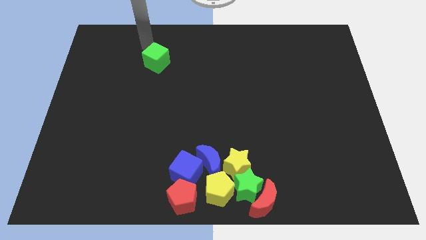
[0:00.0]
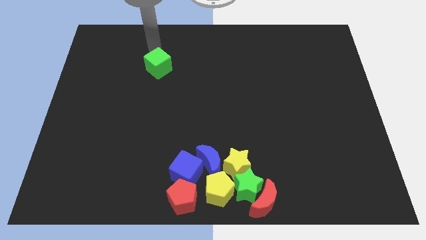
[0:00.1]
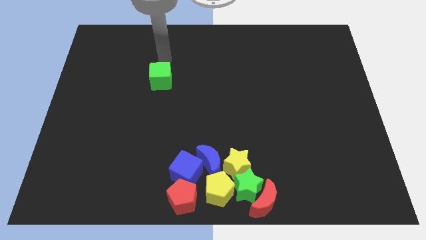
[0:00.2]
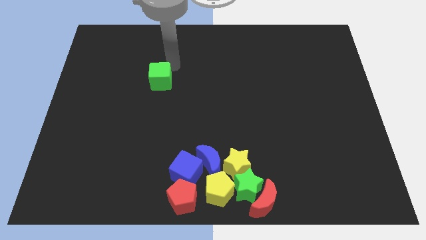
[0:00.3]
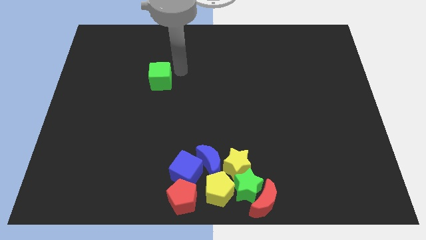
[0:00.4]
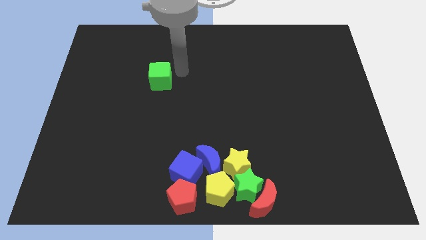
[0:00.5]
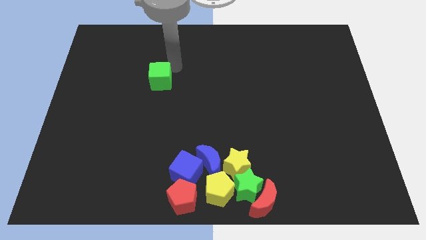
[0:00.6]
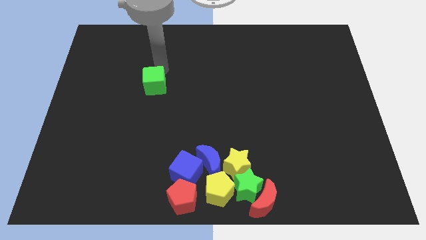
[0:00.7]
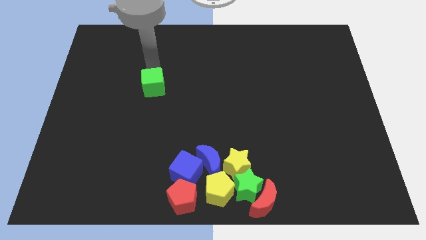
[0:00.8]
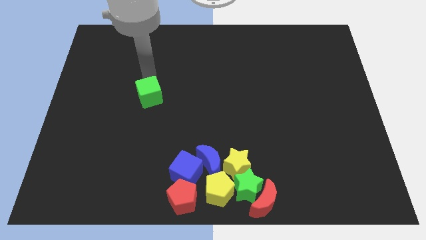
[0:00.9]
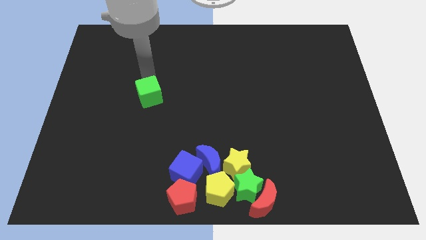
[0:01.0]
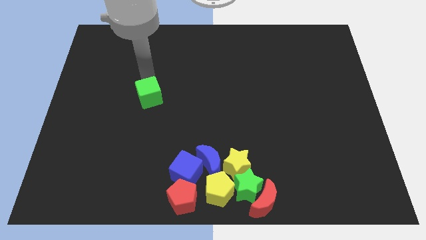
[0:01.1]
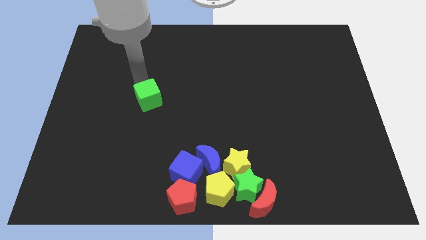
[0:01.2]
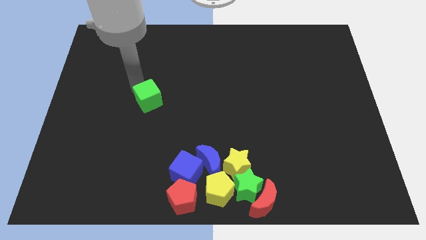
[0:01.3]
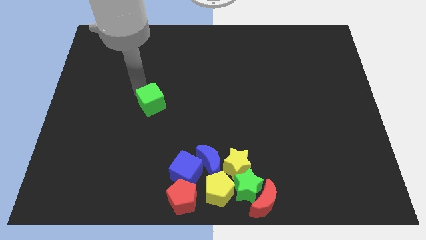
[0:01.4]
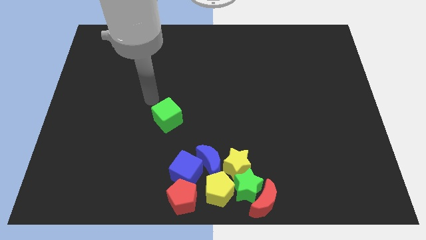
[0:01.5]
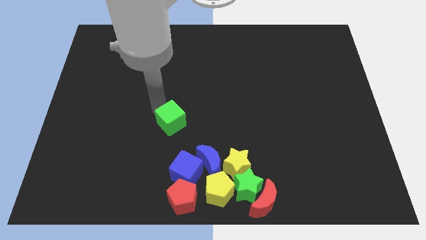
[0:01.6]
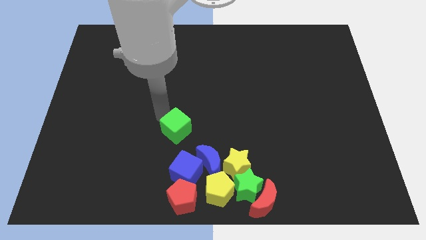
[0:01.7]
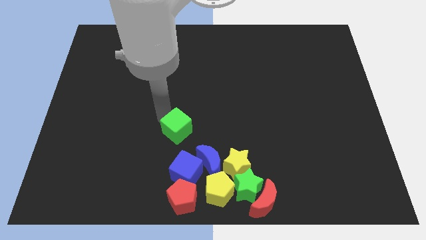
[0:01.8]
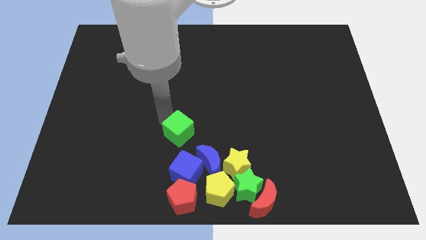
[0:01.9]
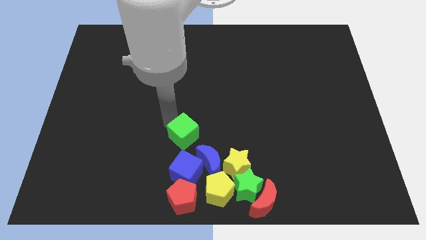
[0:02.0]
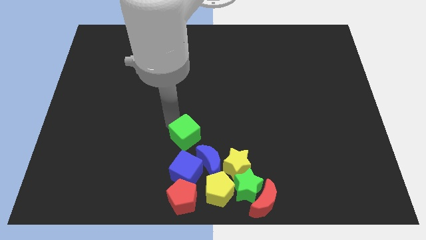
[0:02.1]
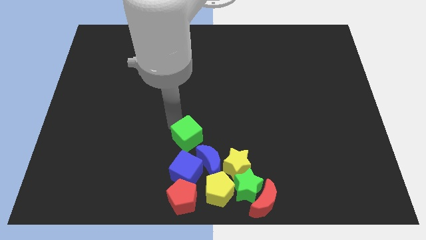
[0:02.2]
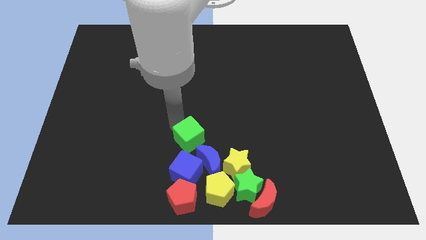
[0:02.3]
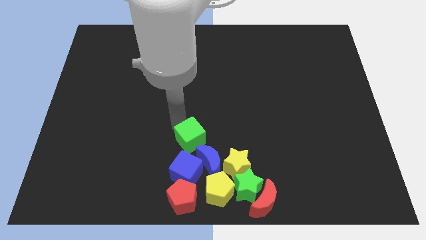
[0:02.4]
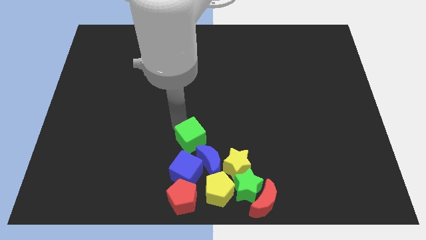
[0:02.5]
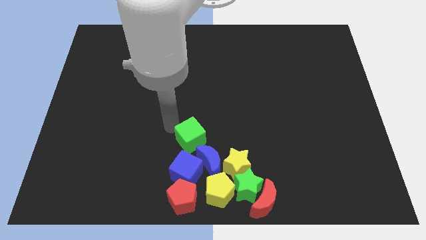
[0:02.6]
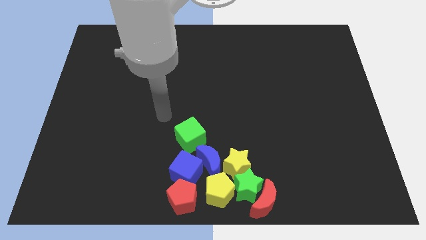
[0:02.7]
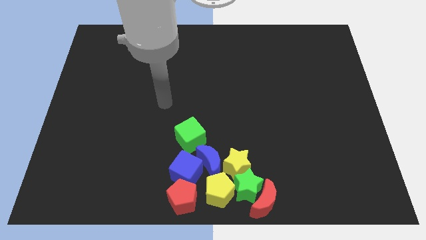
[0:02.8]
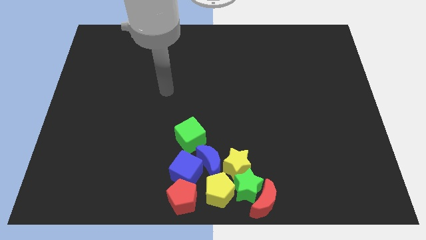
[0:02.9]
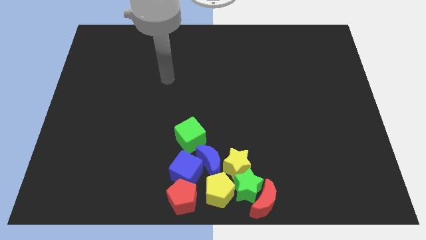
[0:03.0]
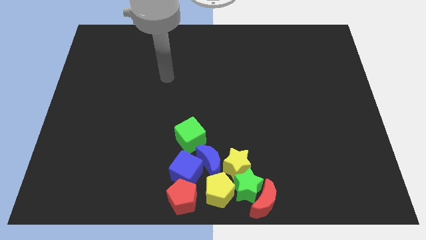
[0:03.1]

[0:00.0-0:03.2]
slide the green cube into the group of blue blocks

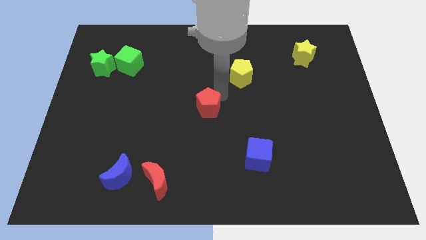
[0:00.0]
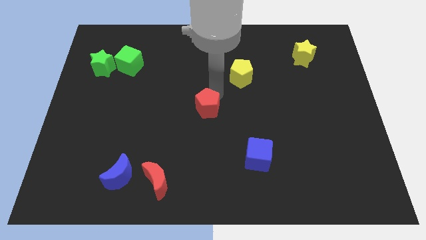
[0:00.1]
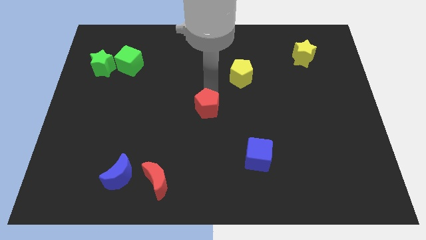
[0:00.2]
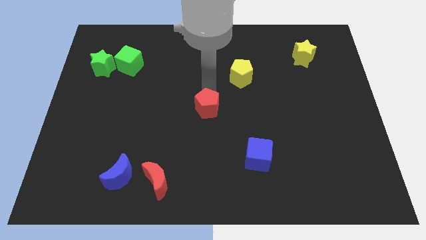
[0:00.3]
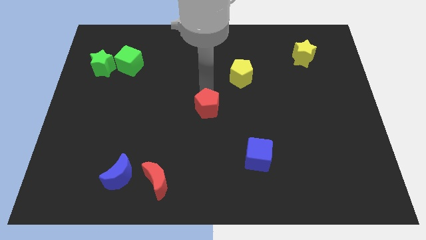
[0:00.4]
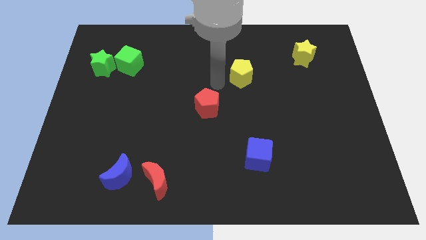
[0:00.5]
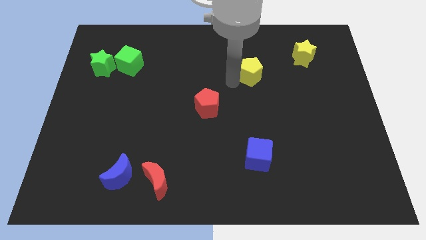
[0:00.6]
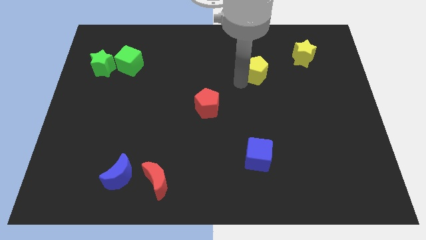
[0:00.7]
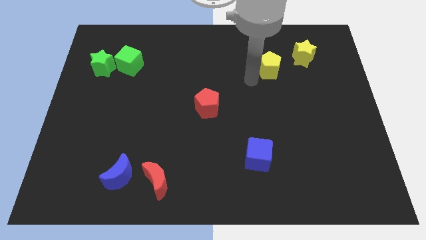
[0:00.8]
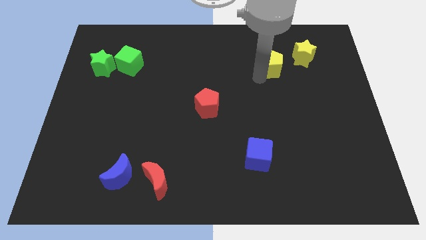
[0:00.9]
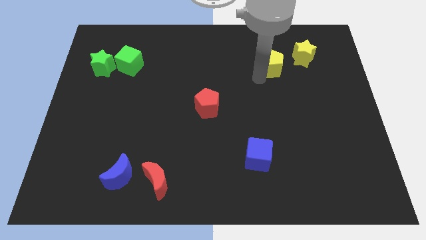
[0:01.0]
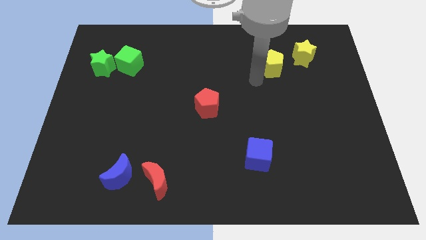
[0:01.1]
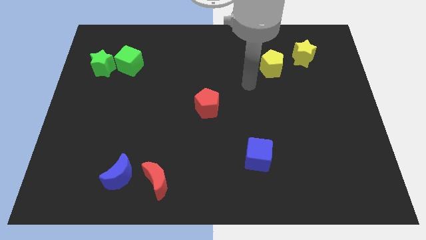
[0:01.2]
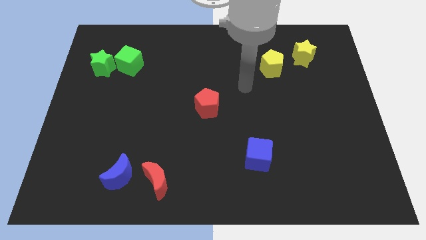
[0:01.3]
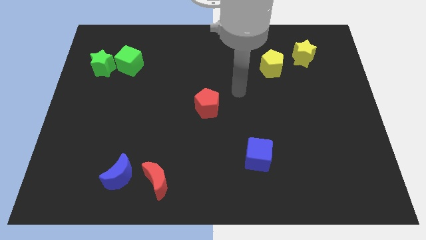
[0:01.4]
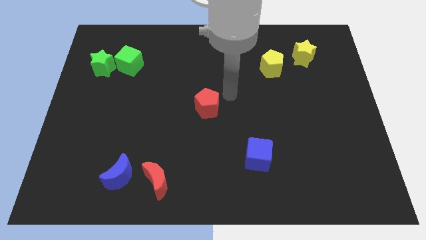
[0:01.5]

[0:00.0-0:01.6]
push the yellow pentagon near to the yellow star

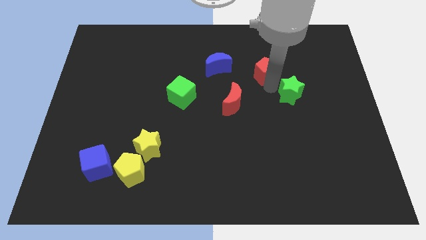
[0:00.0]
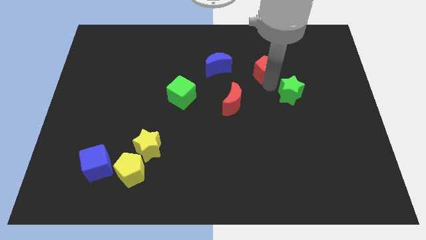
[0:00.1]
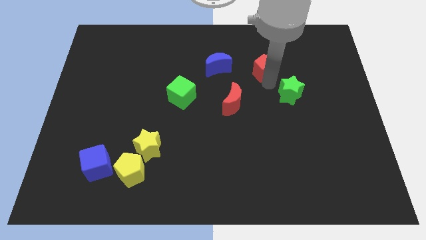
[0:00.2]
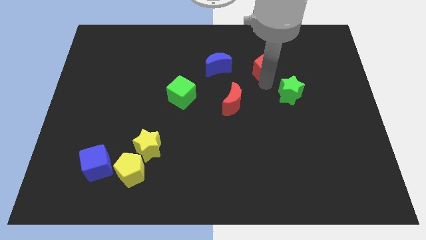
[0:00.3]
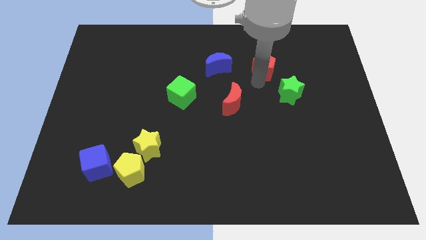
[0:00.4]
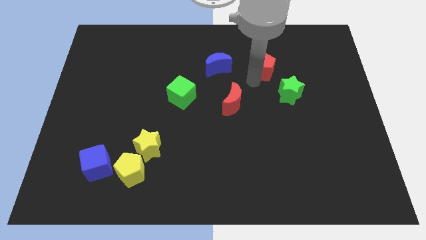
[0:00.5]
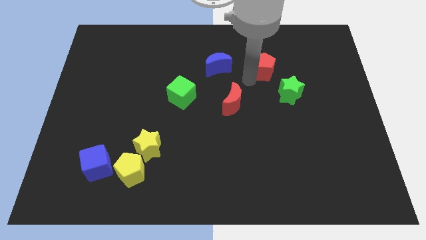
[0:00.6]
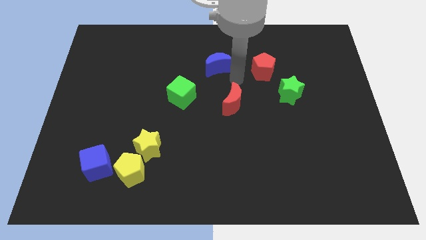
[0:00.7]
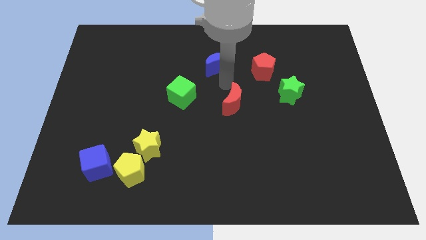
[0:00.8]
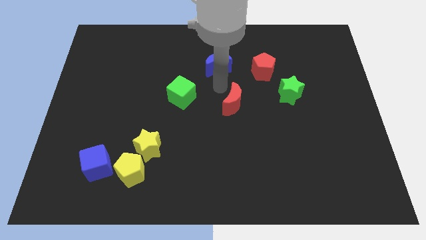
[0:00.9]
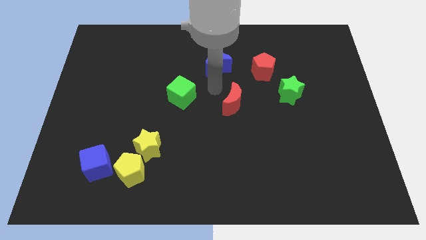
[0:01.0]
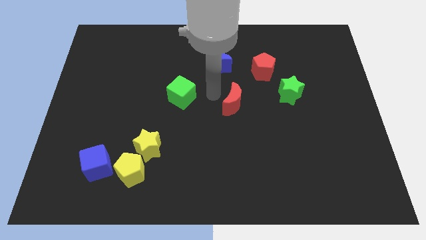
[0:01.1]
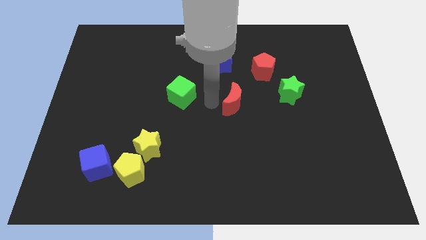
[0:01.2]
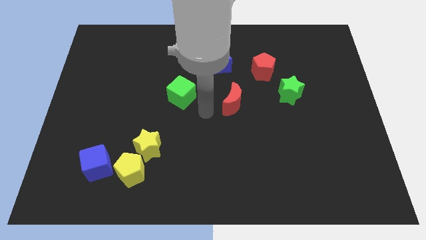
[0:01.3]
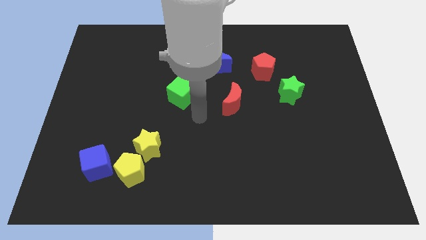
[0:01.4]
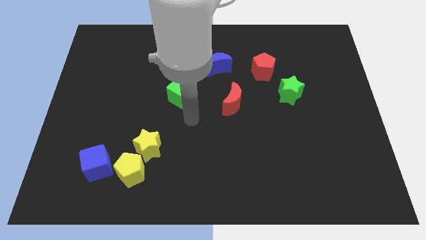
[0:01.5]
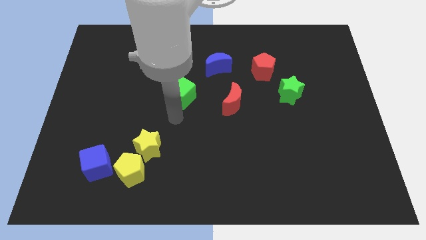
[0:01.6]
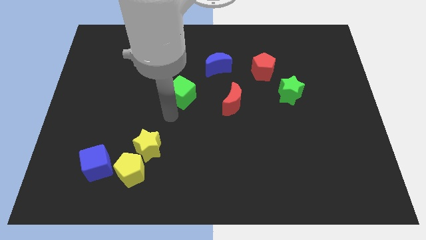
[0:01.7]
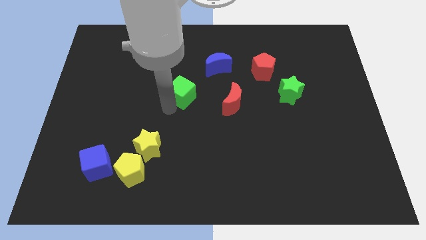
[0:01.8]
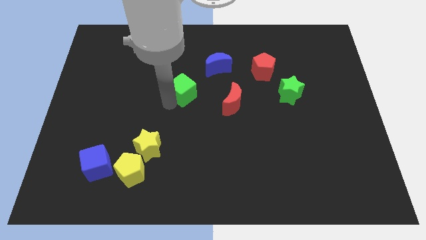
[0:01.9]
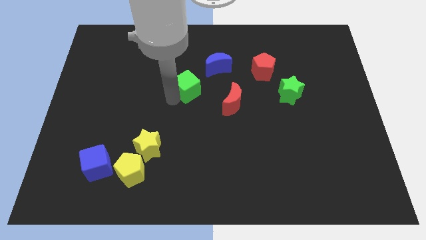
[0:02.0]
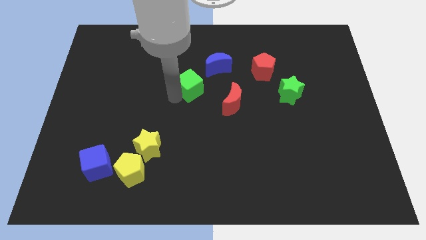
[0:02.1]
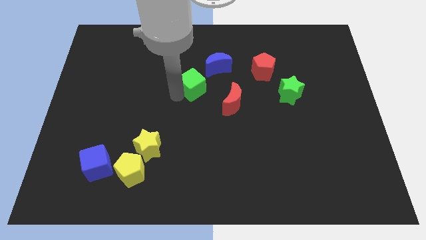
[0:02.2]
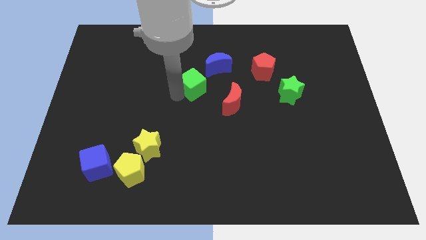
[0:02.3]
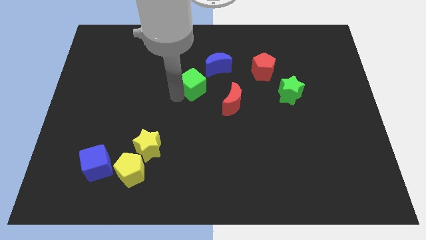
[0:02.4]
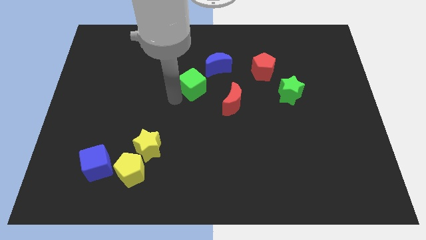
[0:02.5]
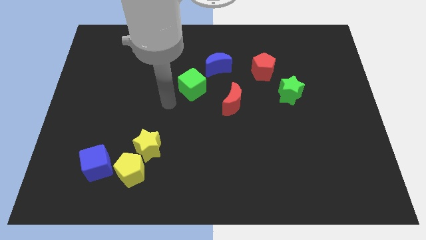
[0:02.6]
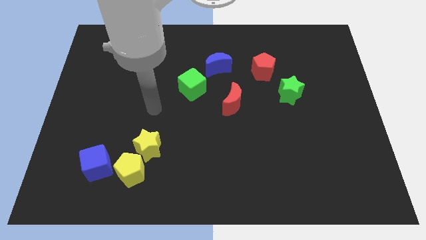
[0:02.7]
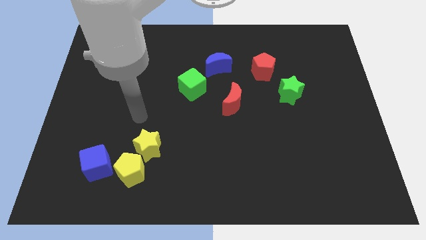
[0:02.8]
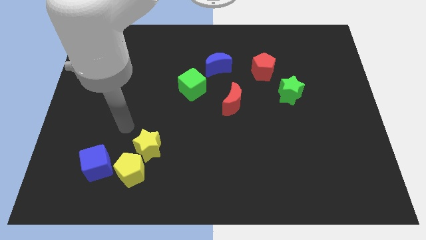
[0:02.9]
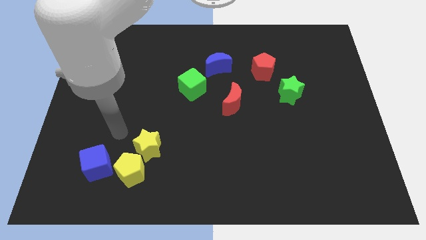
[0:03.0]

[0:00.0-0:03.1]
move green cube near to blue moon

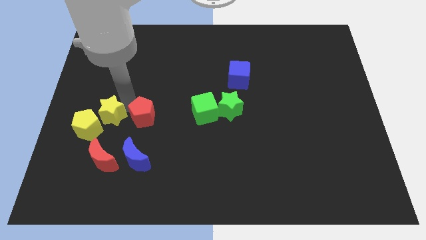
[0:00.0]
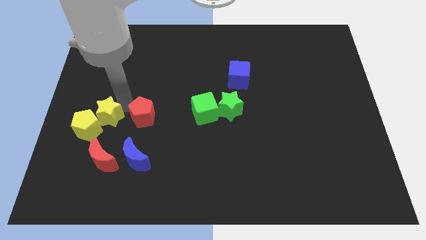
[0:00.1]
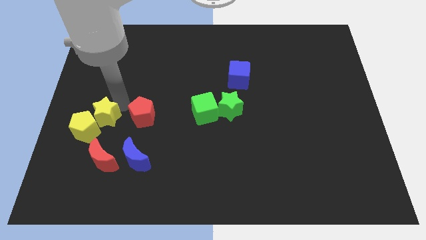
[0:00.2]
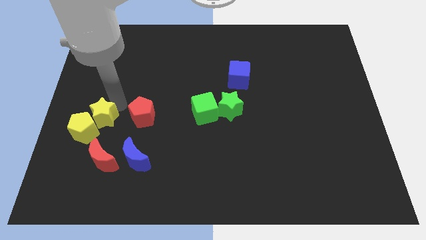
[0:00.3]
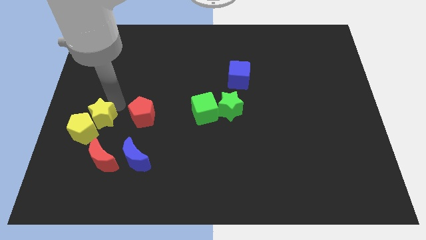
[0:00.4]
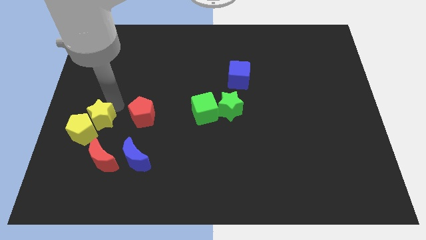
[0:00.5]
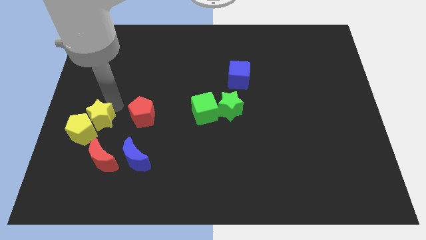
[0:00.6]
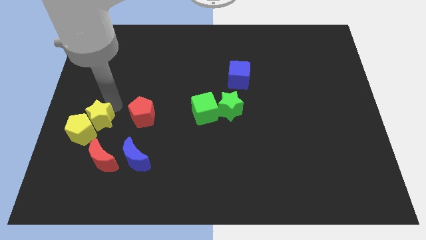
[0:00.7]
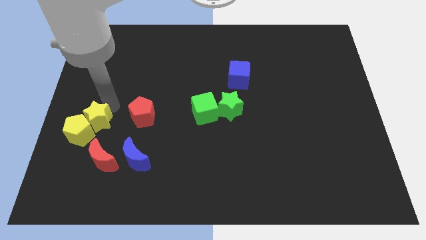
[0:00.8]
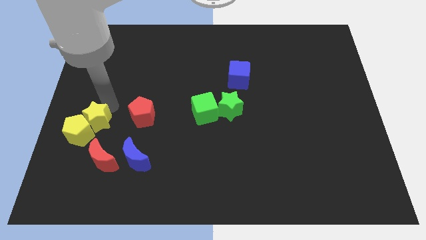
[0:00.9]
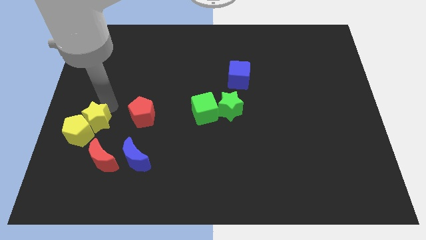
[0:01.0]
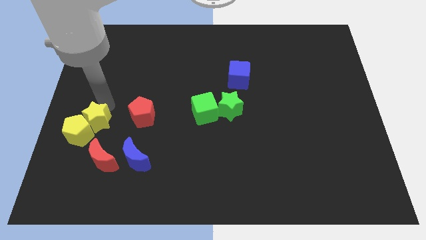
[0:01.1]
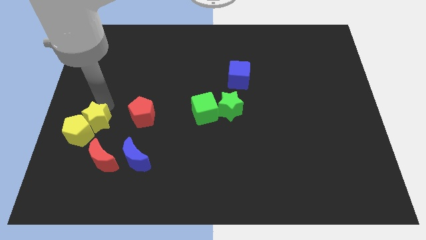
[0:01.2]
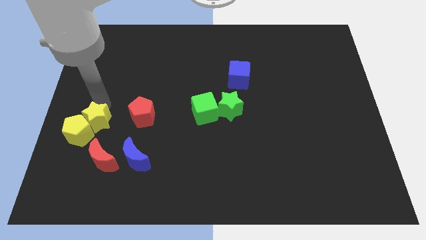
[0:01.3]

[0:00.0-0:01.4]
push the yellow star and yellow pentagon away from the red pentagon
